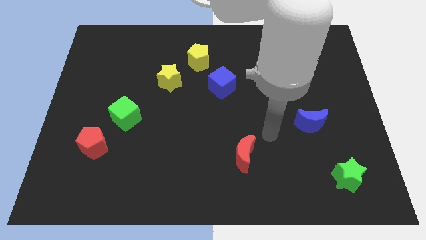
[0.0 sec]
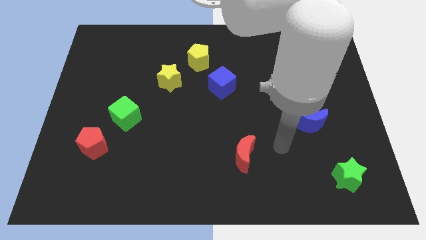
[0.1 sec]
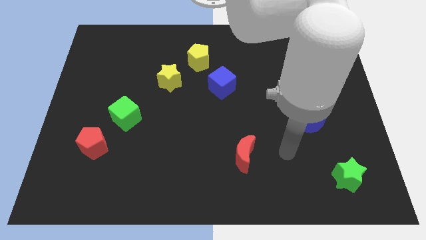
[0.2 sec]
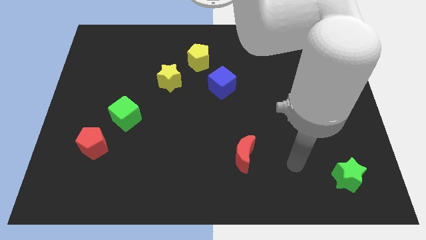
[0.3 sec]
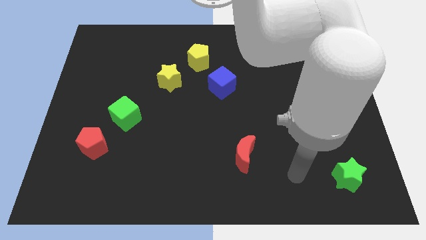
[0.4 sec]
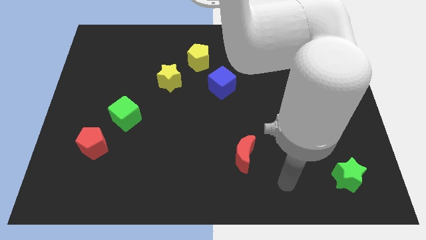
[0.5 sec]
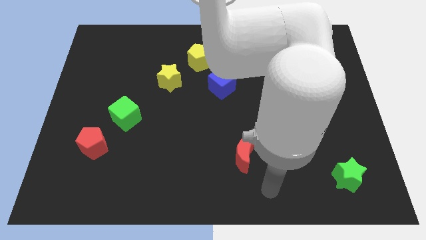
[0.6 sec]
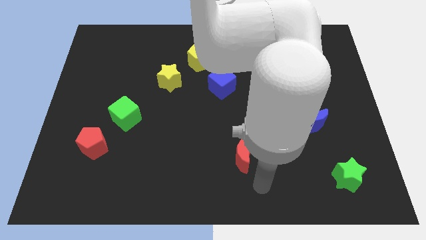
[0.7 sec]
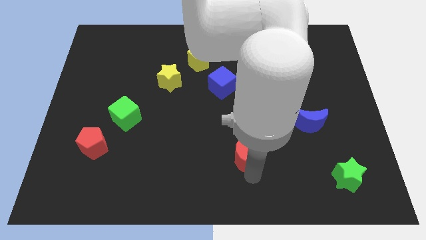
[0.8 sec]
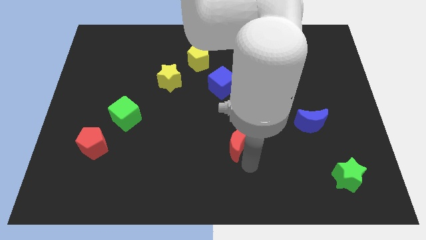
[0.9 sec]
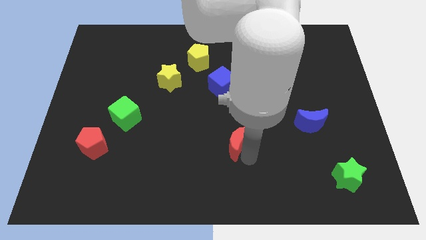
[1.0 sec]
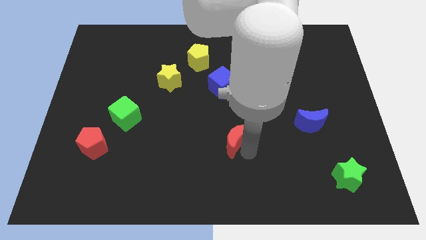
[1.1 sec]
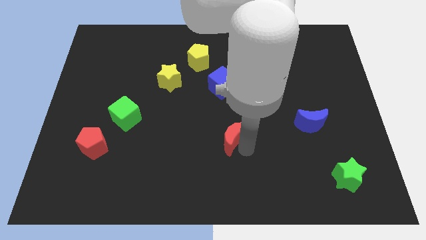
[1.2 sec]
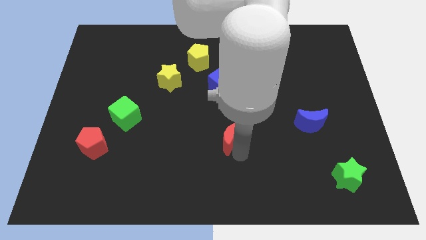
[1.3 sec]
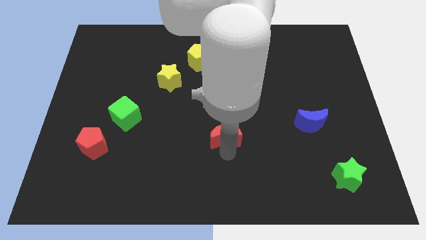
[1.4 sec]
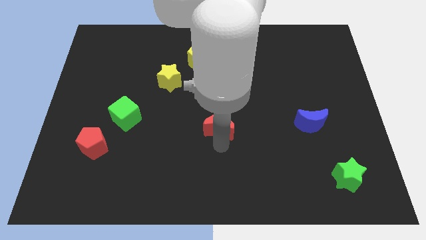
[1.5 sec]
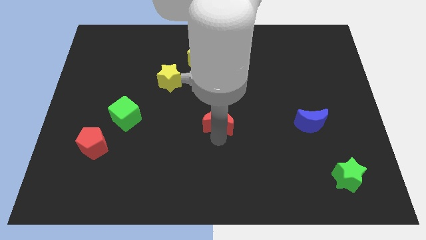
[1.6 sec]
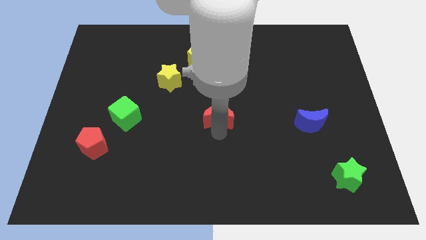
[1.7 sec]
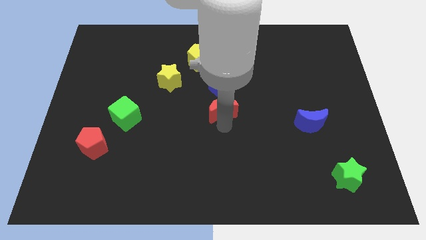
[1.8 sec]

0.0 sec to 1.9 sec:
push the red moon towards the center

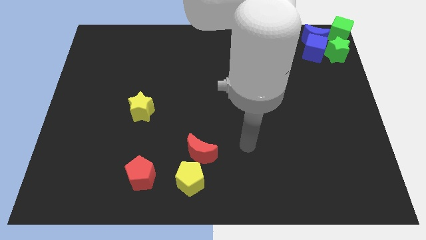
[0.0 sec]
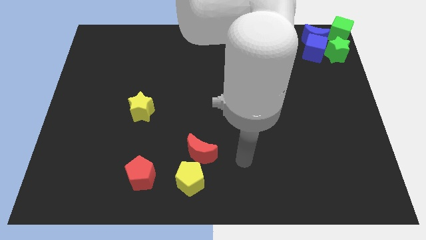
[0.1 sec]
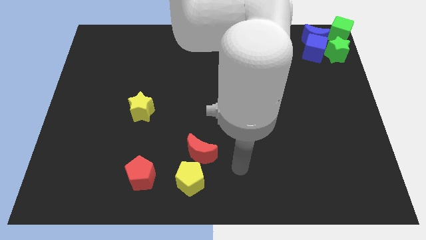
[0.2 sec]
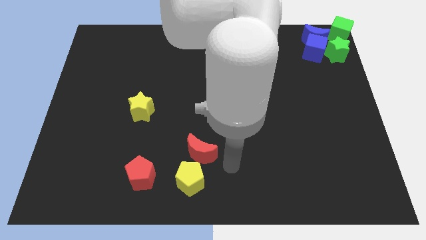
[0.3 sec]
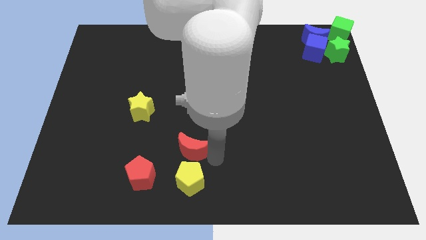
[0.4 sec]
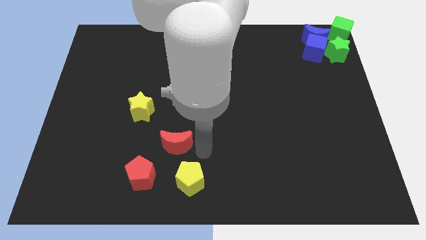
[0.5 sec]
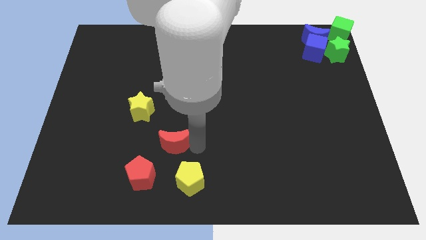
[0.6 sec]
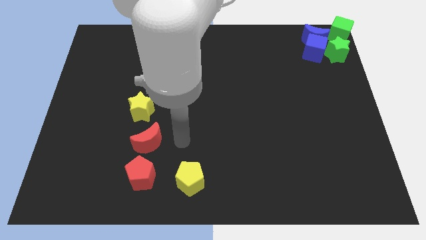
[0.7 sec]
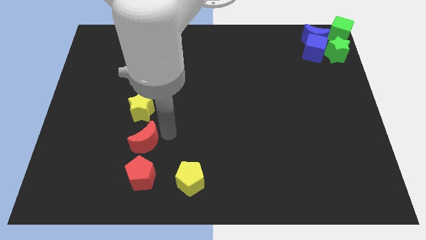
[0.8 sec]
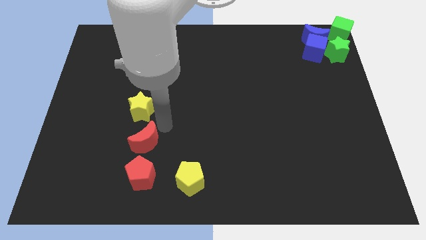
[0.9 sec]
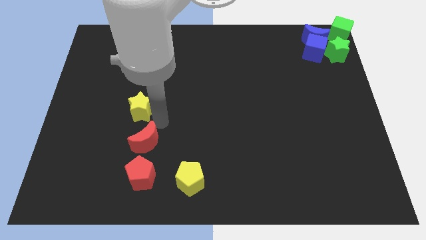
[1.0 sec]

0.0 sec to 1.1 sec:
place the red crescent in between the yellow star and the red pentagon

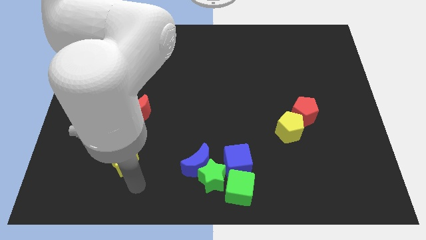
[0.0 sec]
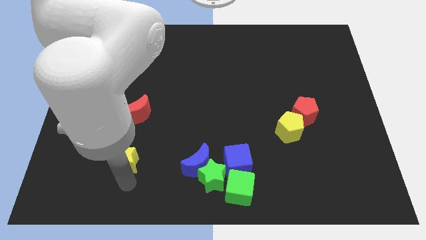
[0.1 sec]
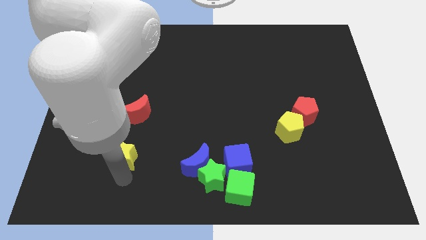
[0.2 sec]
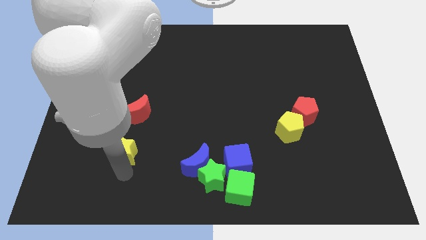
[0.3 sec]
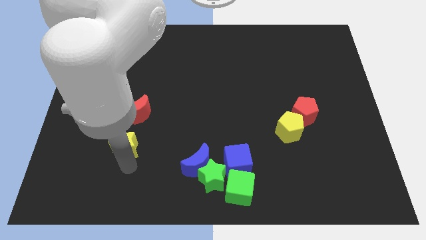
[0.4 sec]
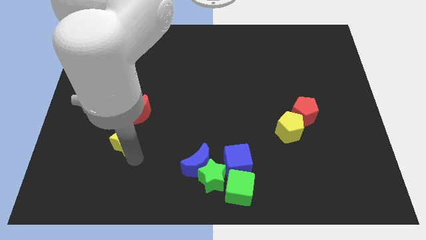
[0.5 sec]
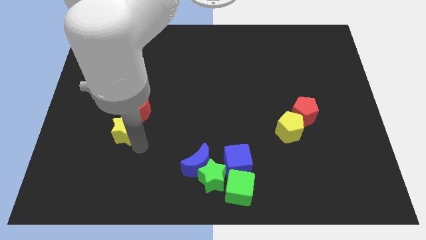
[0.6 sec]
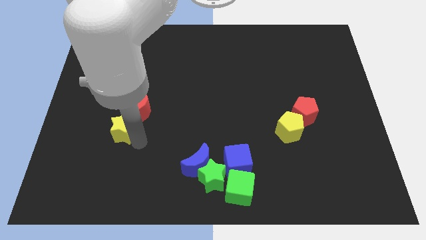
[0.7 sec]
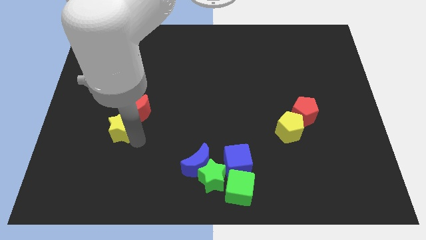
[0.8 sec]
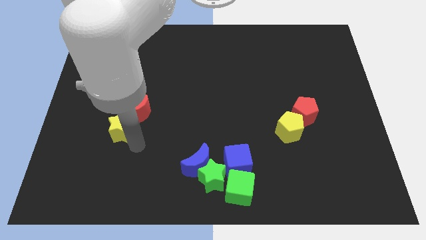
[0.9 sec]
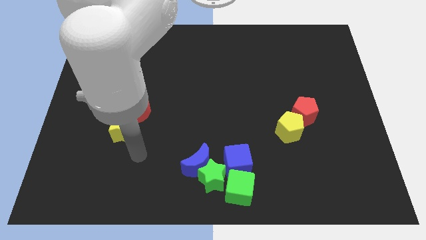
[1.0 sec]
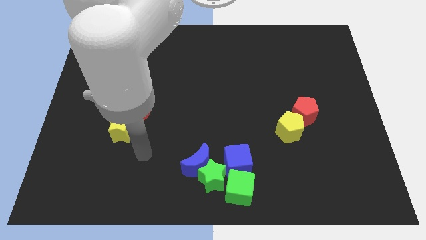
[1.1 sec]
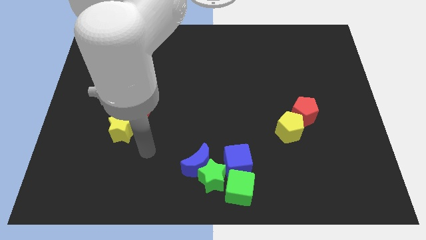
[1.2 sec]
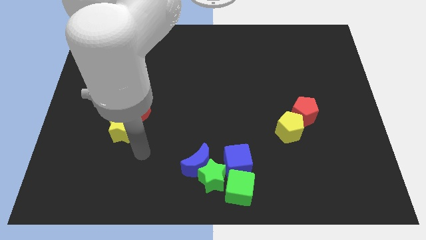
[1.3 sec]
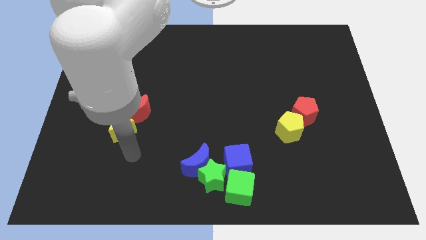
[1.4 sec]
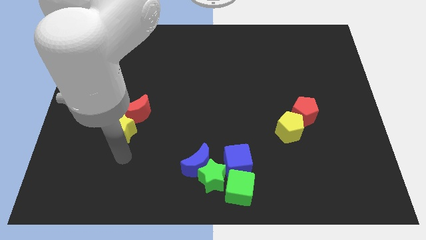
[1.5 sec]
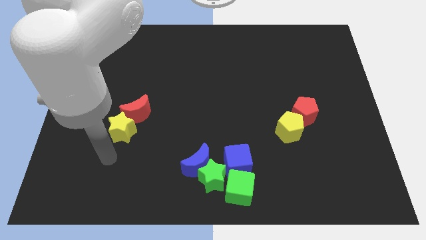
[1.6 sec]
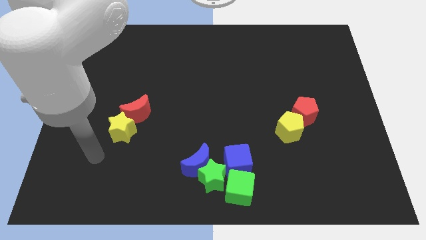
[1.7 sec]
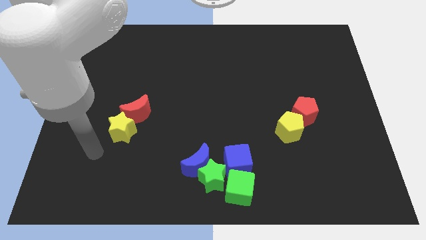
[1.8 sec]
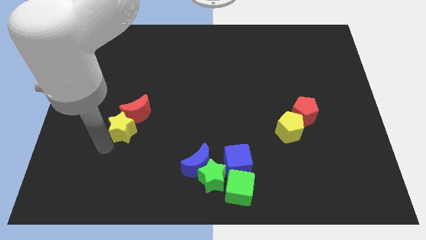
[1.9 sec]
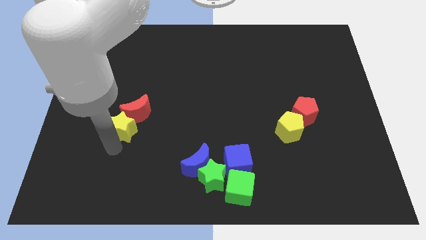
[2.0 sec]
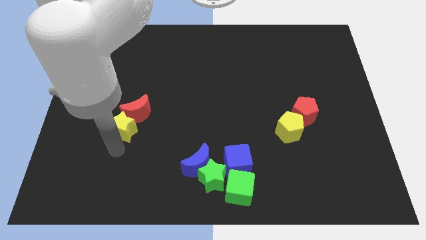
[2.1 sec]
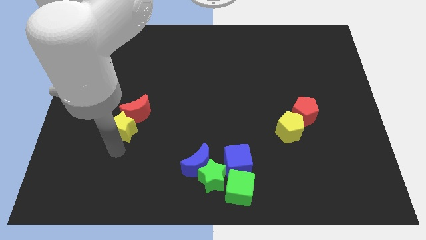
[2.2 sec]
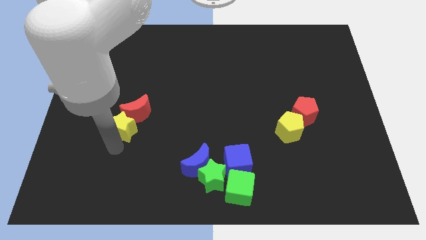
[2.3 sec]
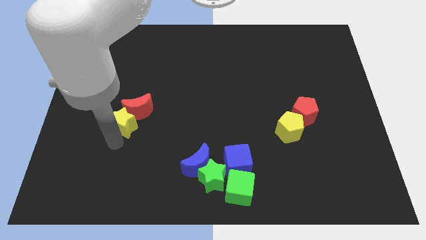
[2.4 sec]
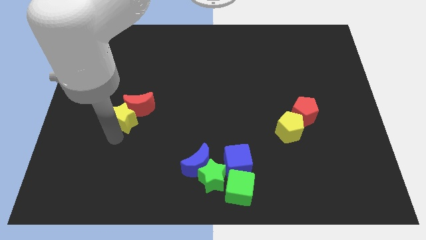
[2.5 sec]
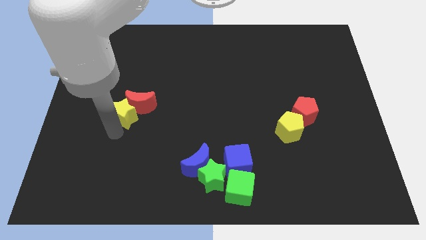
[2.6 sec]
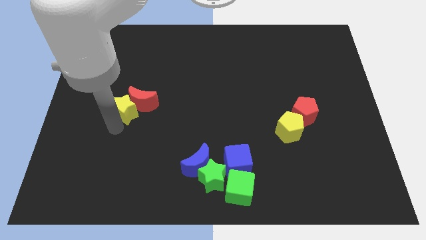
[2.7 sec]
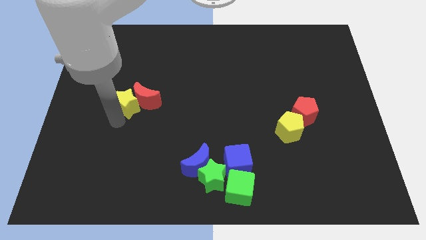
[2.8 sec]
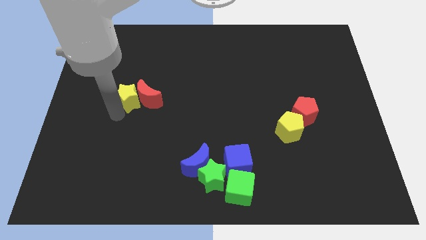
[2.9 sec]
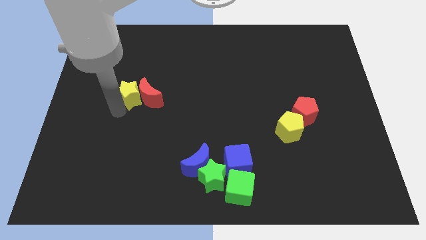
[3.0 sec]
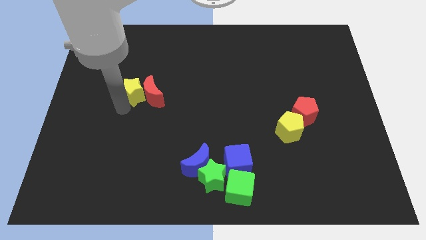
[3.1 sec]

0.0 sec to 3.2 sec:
move the yellow star to the left of the red moon

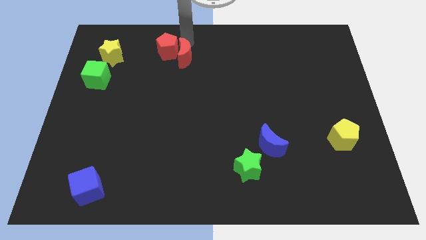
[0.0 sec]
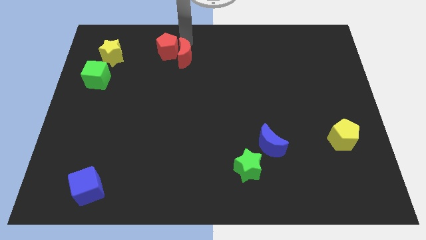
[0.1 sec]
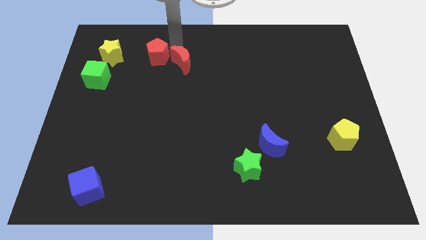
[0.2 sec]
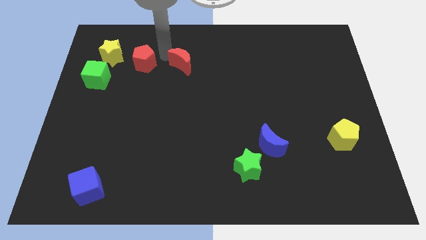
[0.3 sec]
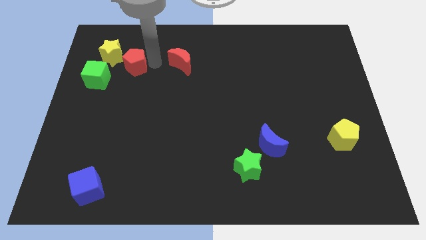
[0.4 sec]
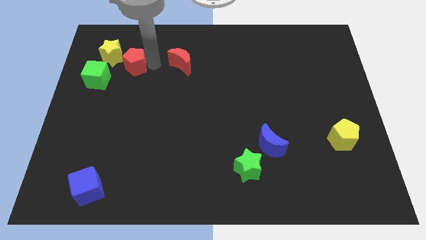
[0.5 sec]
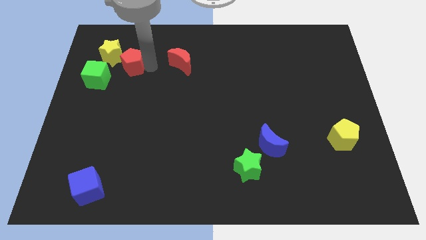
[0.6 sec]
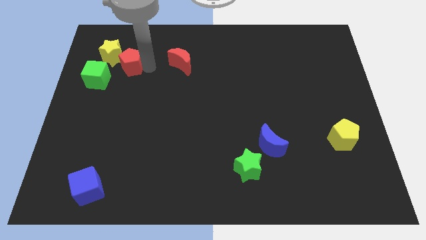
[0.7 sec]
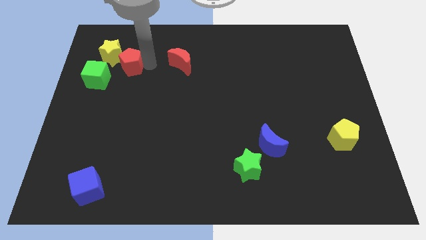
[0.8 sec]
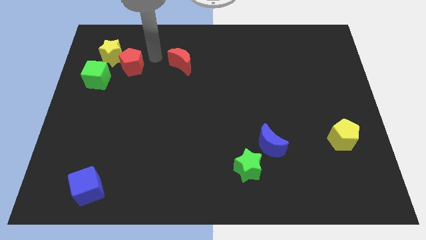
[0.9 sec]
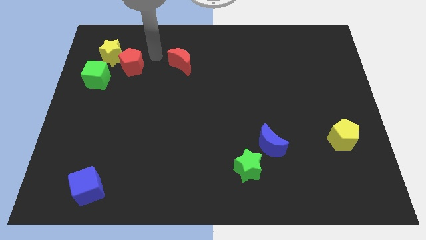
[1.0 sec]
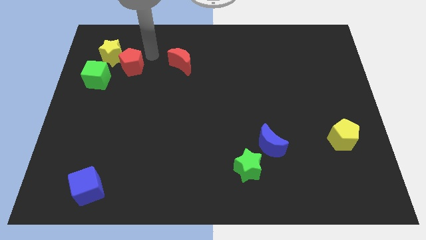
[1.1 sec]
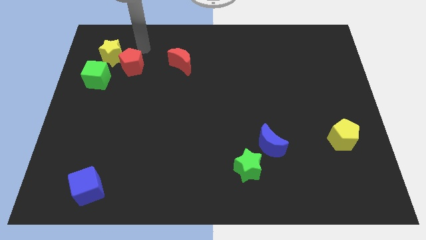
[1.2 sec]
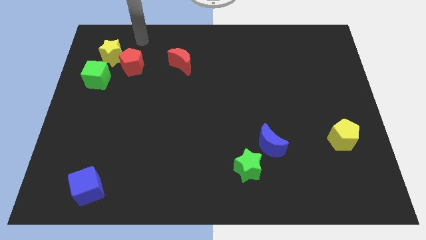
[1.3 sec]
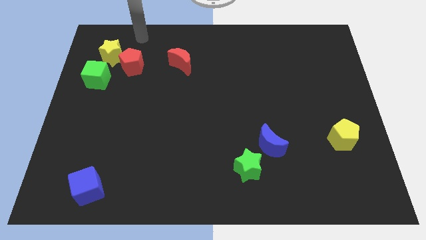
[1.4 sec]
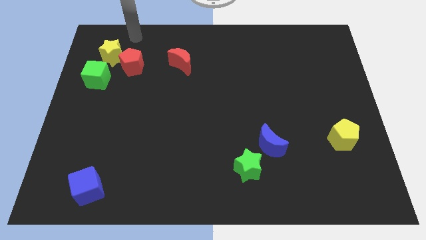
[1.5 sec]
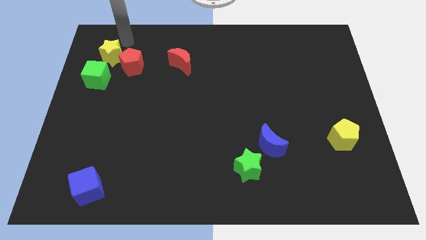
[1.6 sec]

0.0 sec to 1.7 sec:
move the red pentagon closer to the yellow star

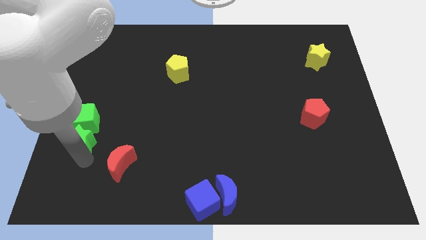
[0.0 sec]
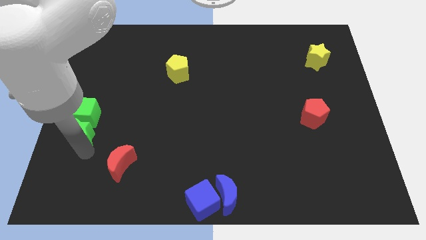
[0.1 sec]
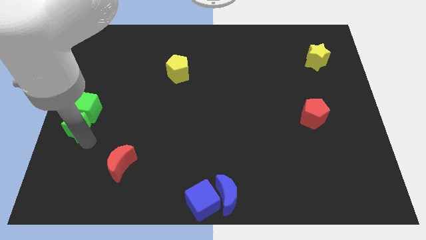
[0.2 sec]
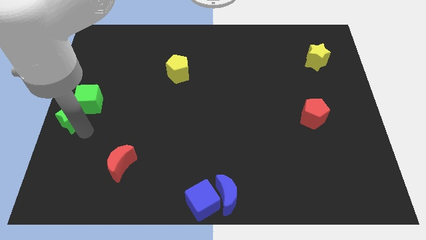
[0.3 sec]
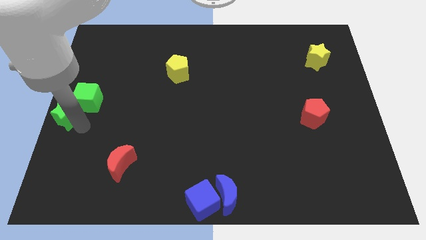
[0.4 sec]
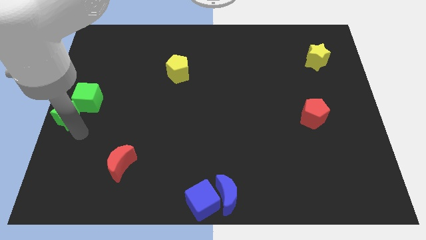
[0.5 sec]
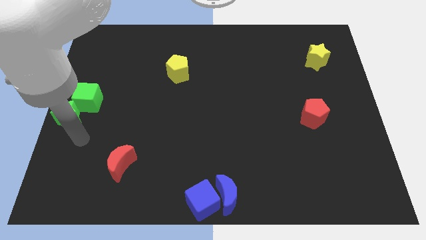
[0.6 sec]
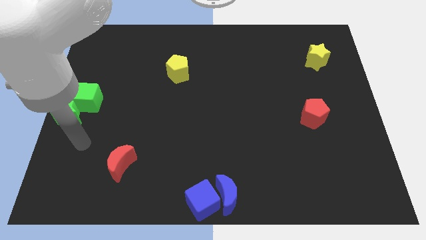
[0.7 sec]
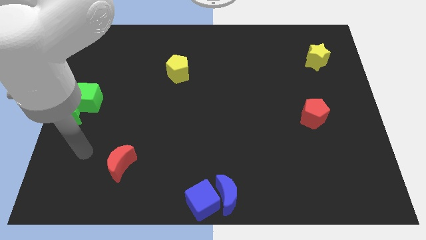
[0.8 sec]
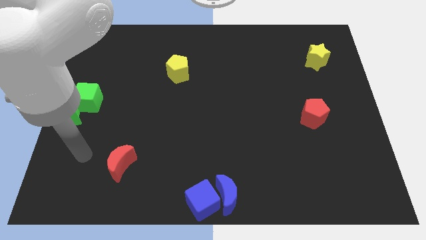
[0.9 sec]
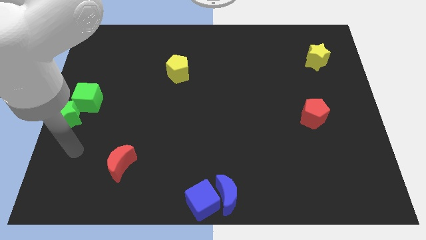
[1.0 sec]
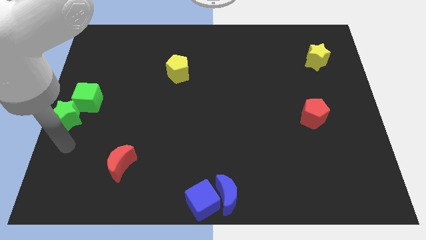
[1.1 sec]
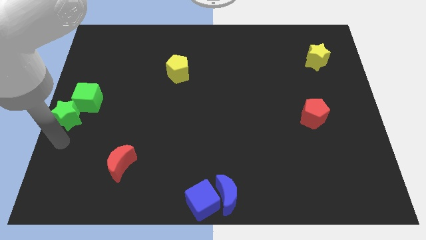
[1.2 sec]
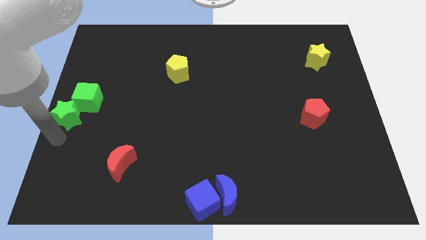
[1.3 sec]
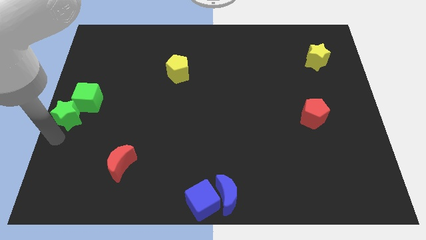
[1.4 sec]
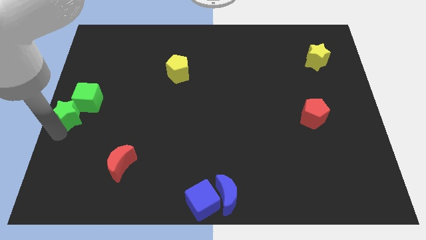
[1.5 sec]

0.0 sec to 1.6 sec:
slightly push green star along with green cube to the middle left corner
